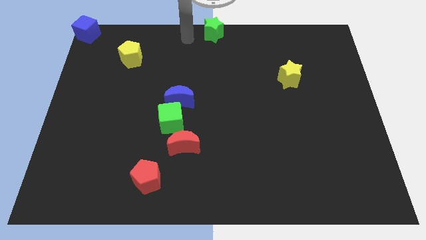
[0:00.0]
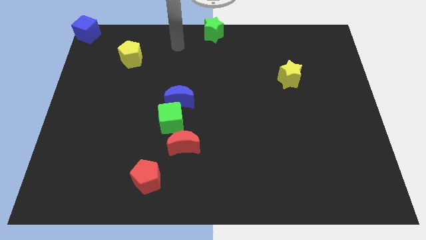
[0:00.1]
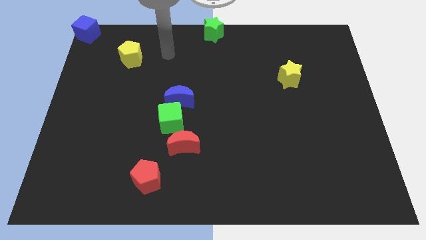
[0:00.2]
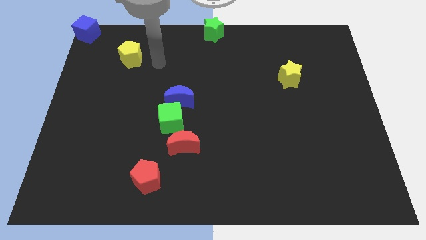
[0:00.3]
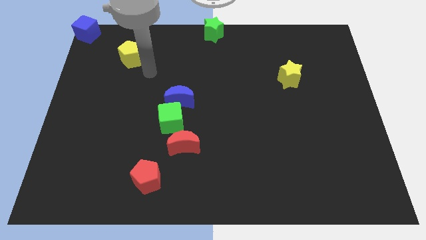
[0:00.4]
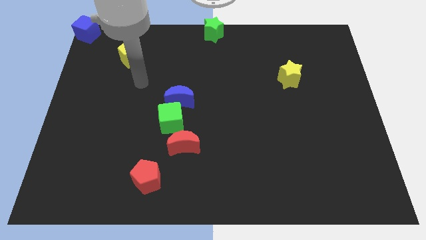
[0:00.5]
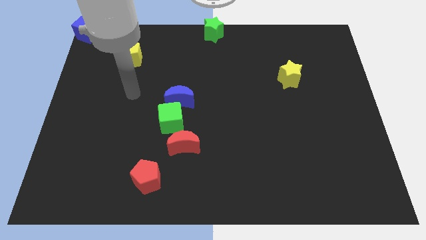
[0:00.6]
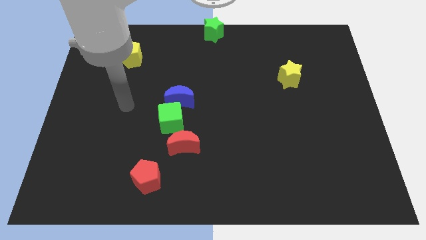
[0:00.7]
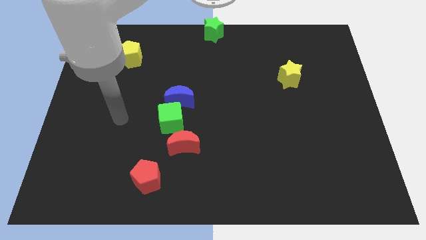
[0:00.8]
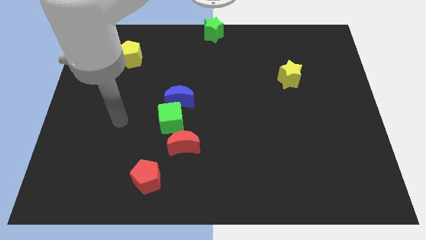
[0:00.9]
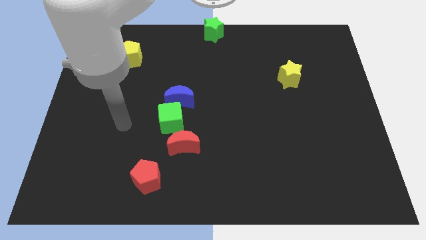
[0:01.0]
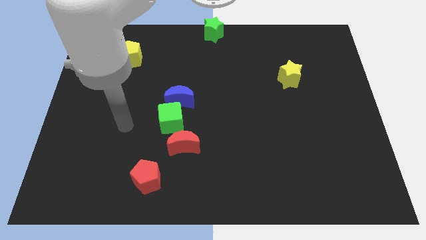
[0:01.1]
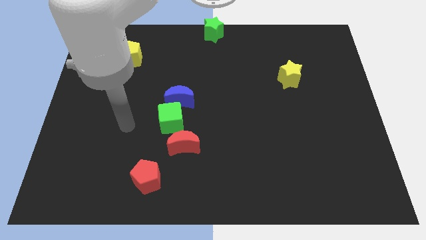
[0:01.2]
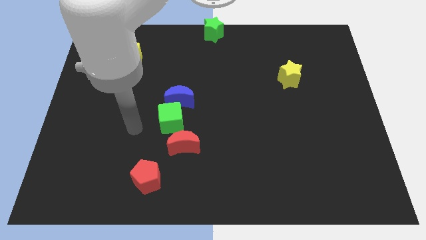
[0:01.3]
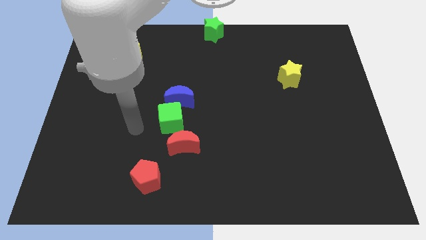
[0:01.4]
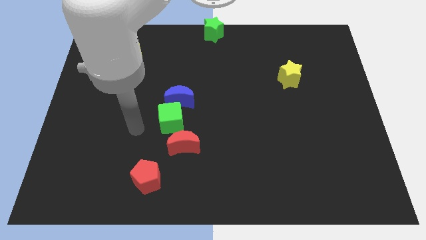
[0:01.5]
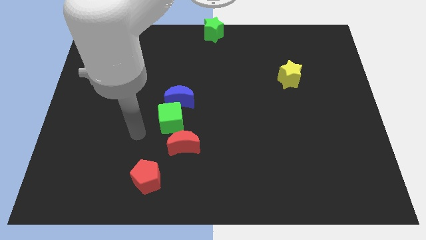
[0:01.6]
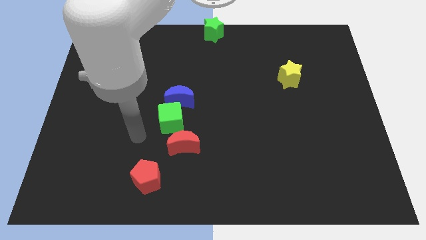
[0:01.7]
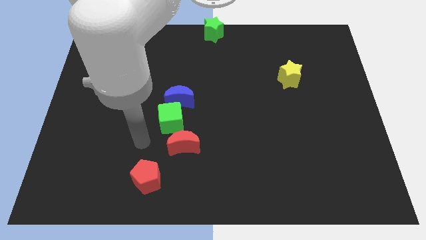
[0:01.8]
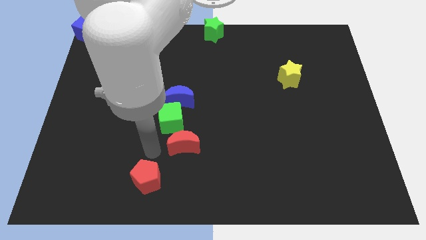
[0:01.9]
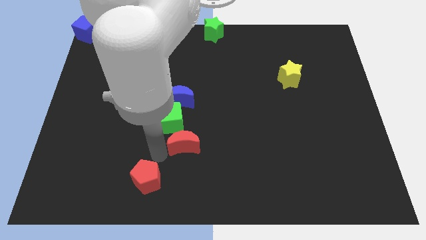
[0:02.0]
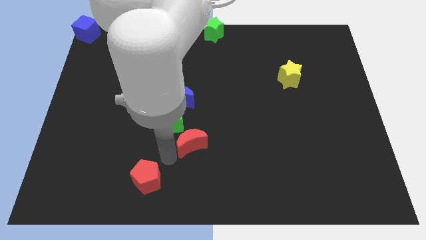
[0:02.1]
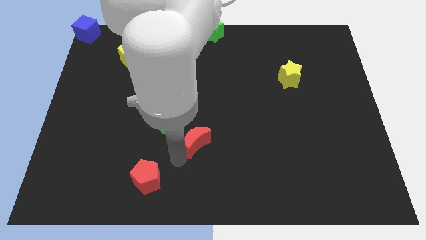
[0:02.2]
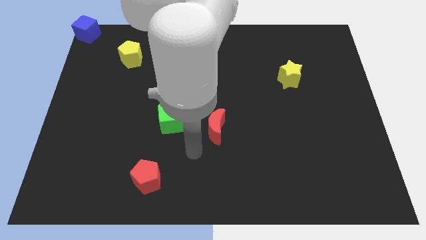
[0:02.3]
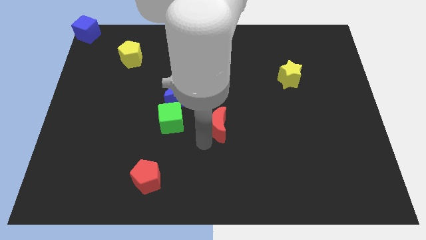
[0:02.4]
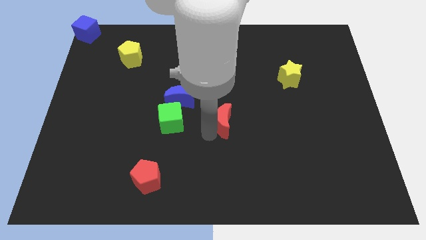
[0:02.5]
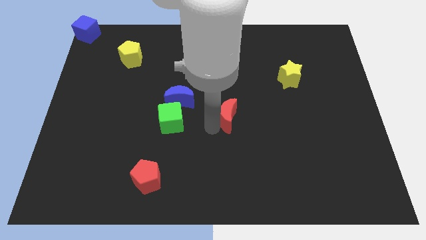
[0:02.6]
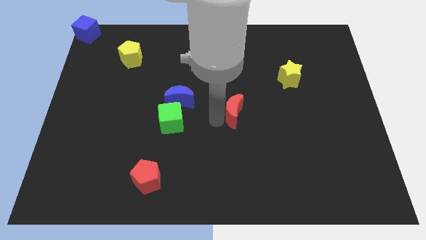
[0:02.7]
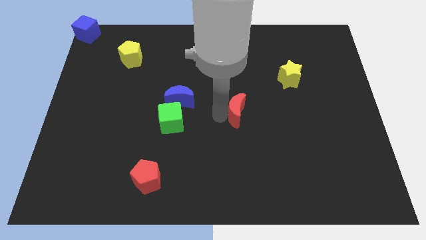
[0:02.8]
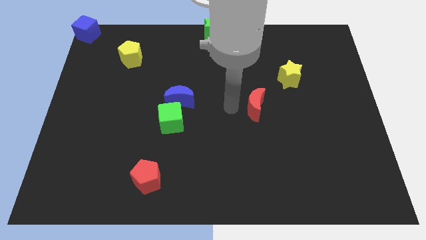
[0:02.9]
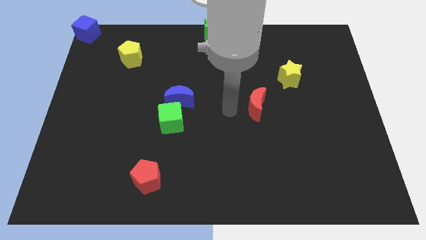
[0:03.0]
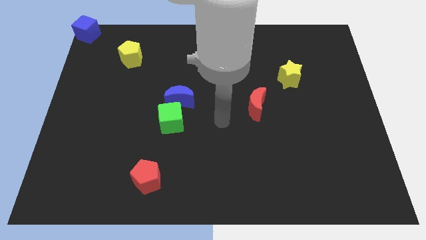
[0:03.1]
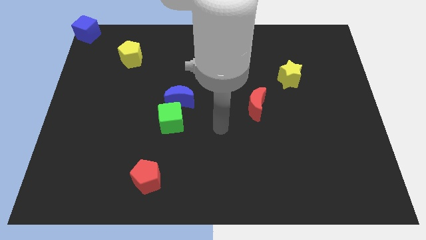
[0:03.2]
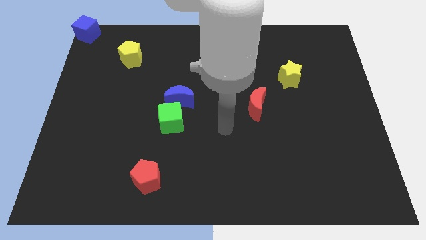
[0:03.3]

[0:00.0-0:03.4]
move the red crescent horizontally to the right side of the blue crescent

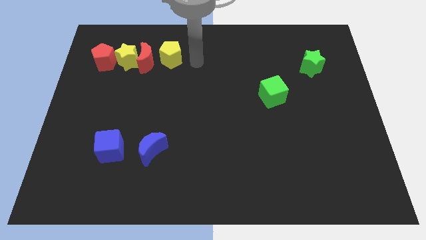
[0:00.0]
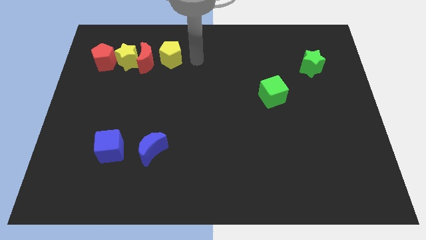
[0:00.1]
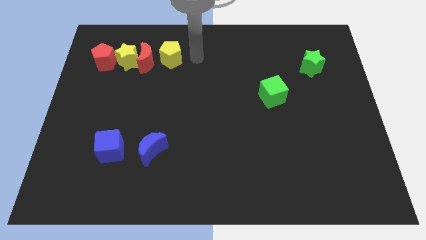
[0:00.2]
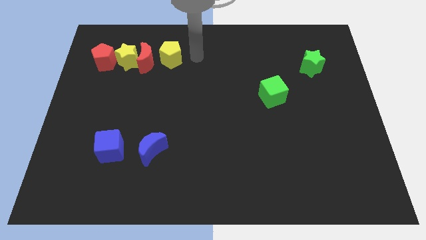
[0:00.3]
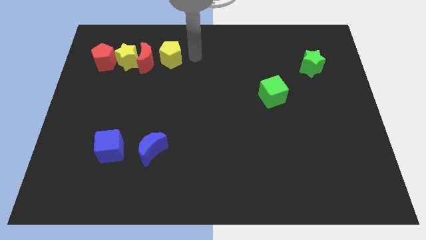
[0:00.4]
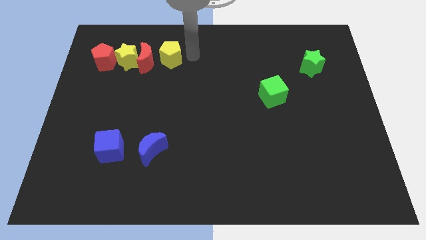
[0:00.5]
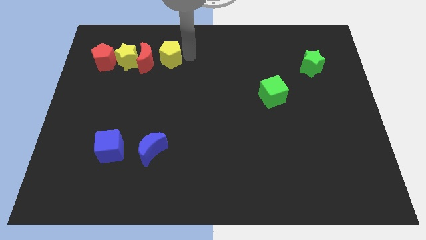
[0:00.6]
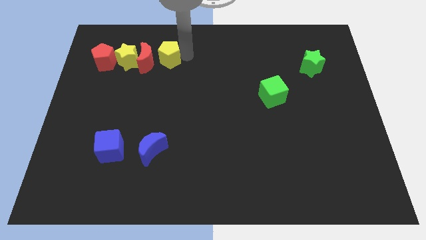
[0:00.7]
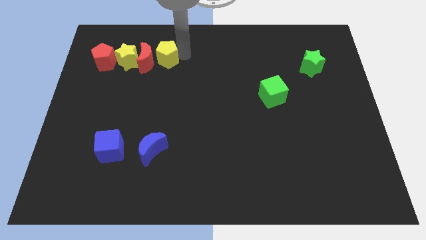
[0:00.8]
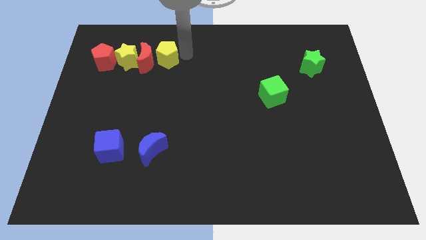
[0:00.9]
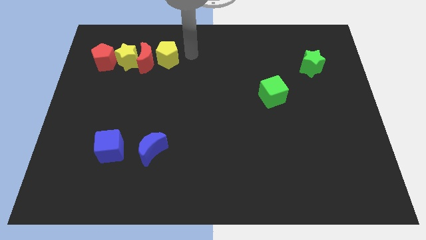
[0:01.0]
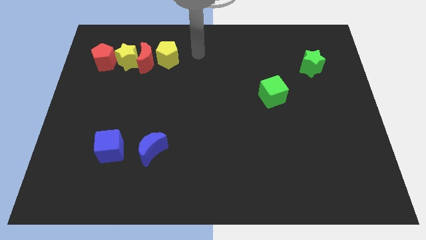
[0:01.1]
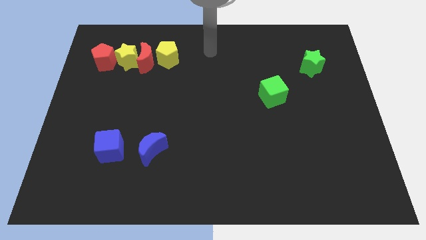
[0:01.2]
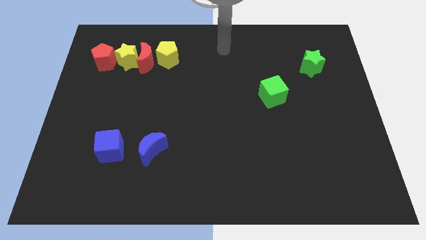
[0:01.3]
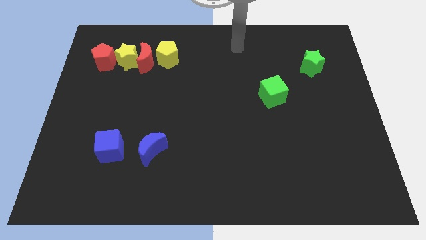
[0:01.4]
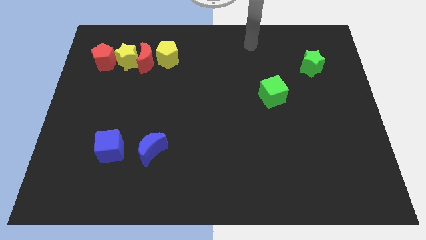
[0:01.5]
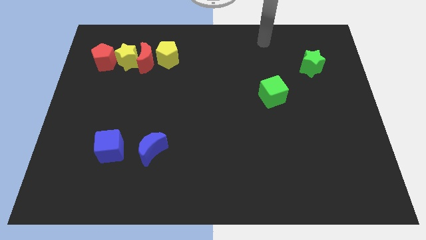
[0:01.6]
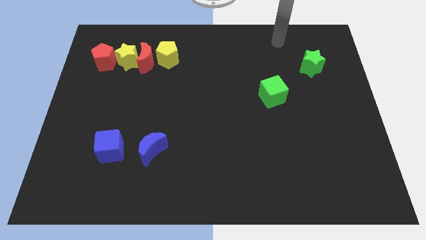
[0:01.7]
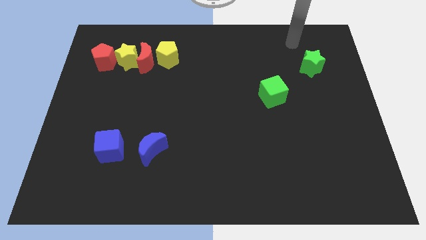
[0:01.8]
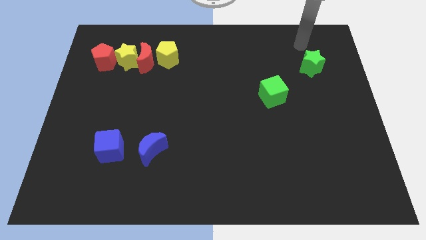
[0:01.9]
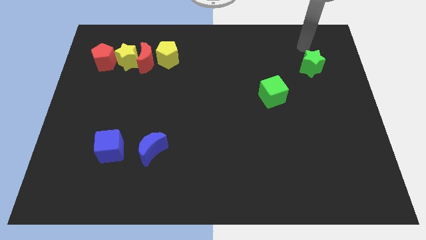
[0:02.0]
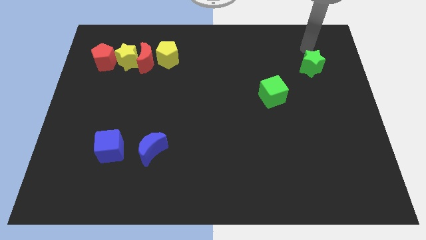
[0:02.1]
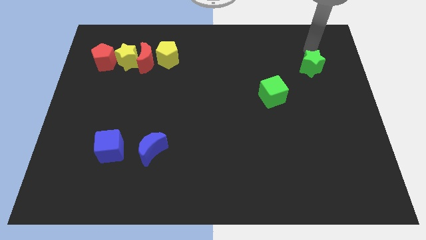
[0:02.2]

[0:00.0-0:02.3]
move the arm above the green star

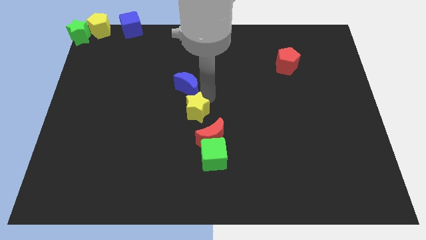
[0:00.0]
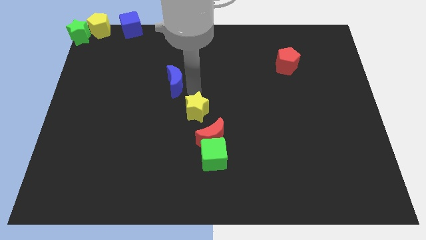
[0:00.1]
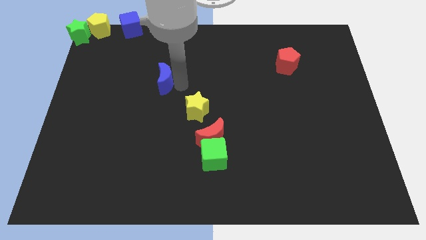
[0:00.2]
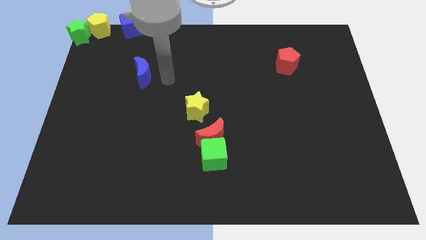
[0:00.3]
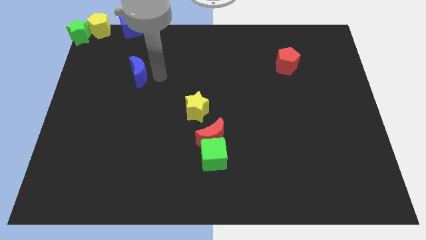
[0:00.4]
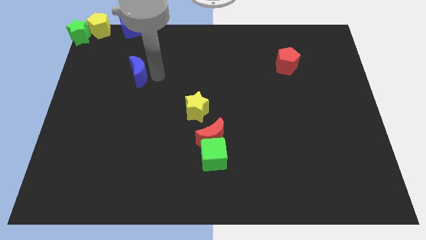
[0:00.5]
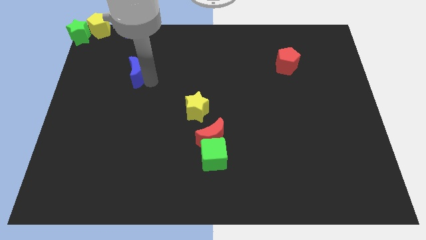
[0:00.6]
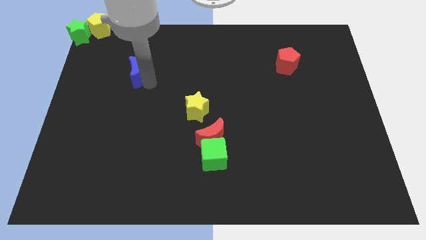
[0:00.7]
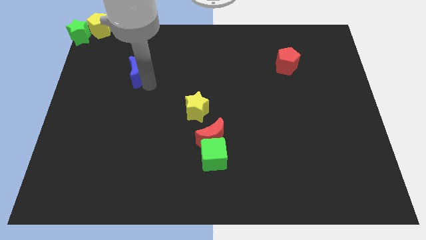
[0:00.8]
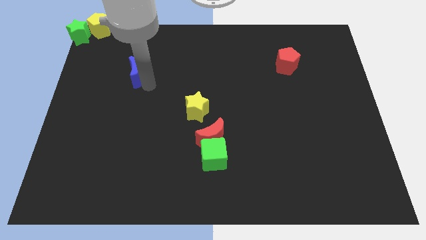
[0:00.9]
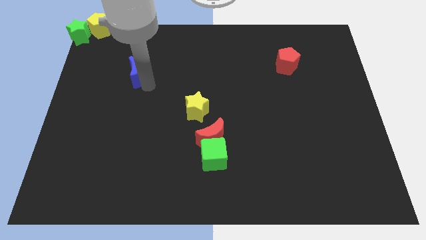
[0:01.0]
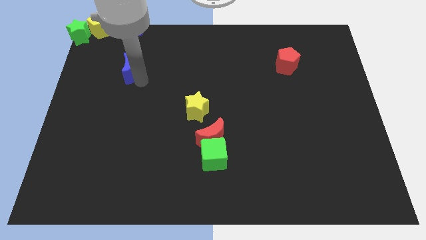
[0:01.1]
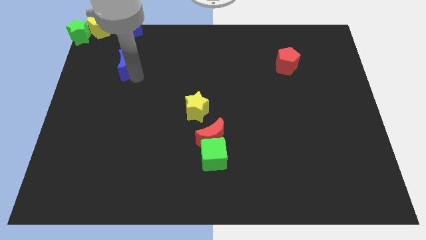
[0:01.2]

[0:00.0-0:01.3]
push the blue crescent to the bottom of the blue cube

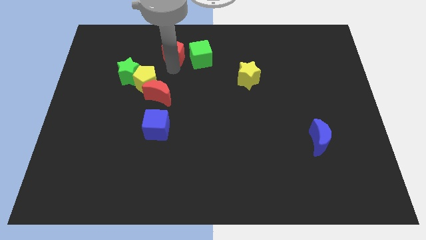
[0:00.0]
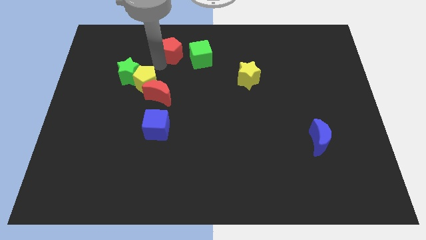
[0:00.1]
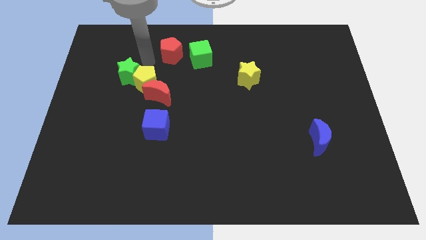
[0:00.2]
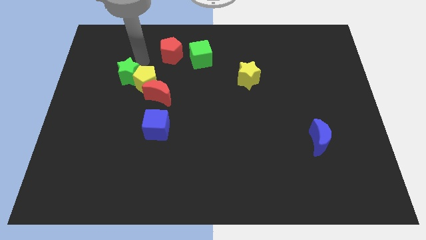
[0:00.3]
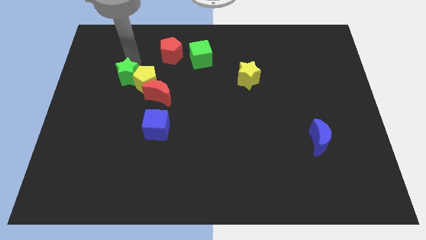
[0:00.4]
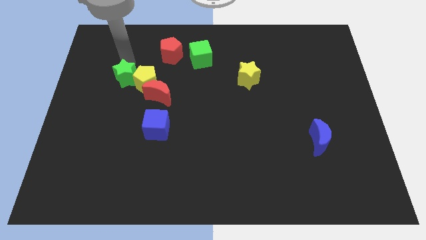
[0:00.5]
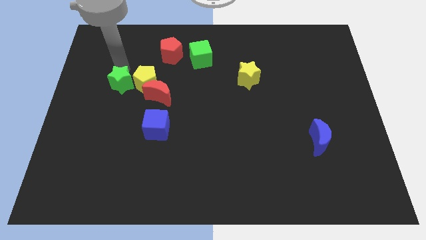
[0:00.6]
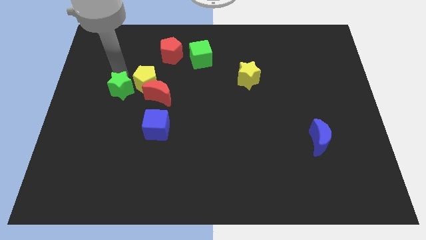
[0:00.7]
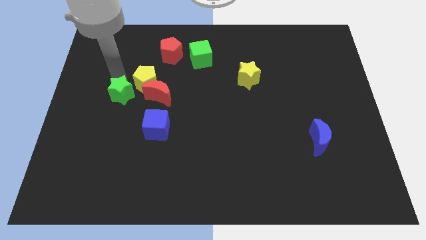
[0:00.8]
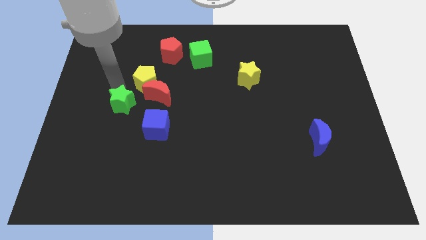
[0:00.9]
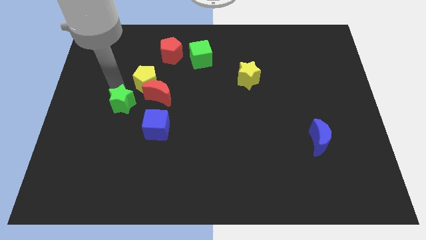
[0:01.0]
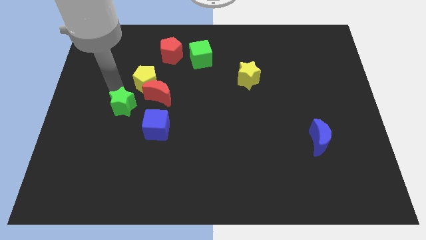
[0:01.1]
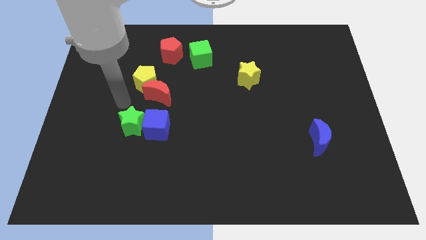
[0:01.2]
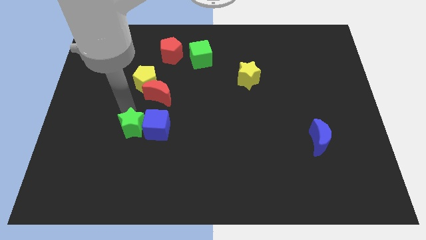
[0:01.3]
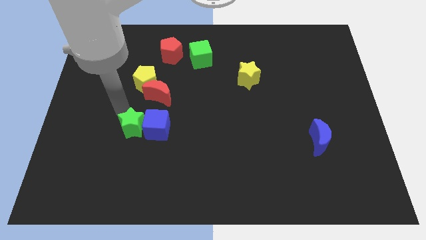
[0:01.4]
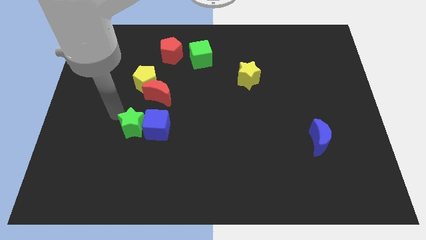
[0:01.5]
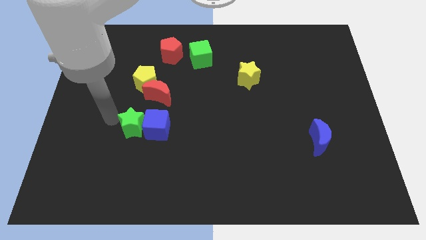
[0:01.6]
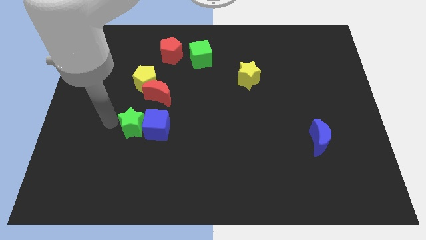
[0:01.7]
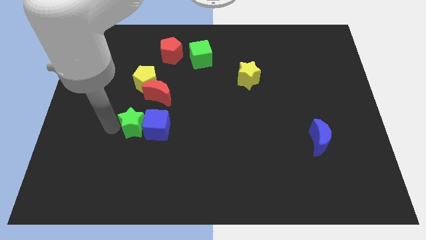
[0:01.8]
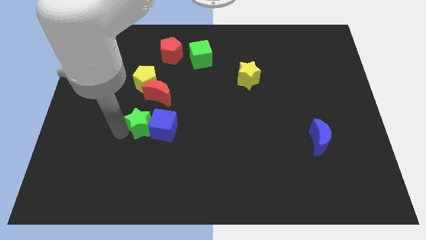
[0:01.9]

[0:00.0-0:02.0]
put the green star and blue cube together
